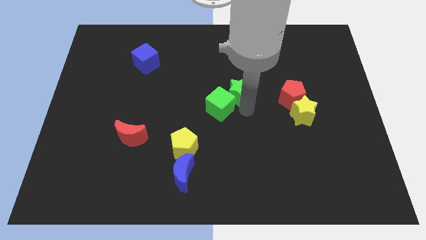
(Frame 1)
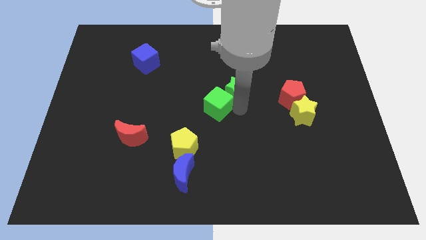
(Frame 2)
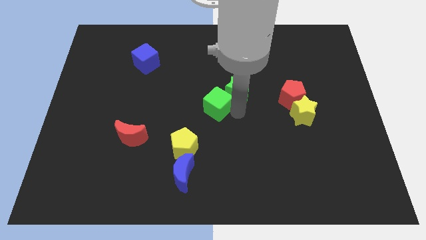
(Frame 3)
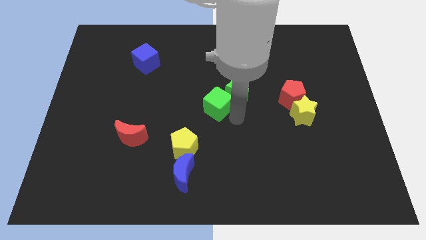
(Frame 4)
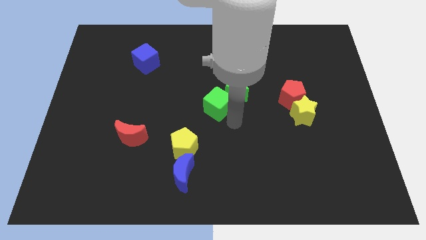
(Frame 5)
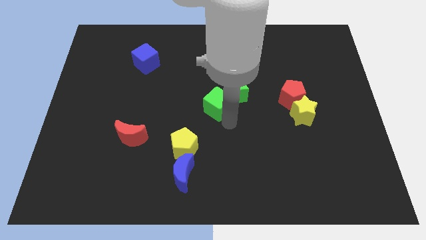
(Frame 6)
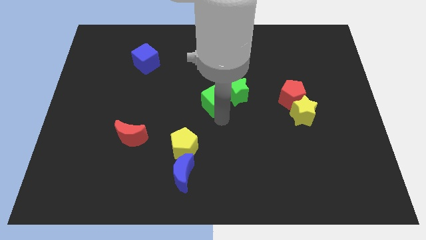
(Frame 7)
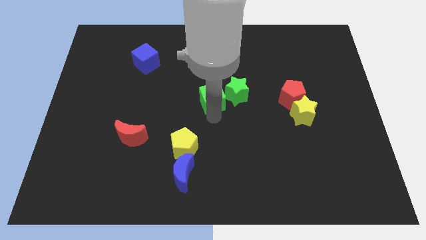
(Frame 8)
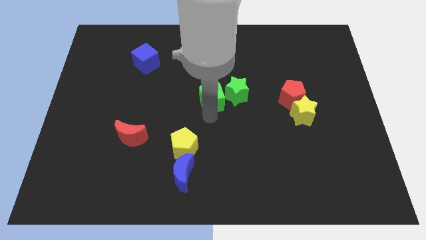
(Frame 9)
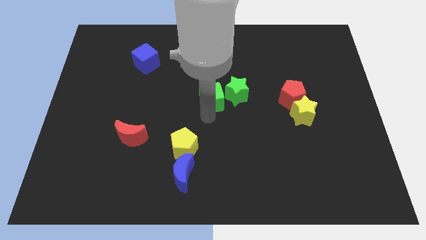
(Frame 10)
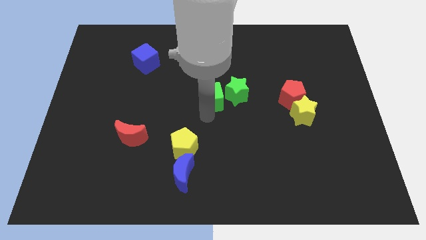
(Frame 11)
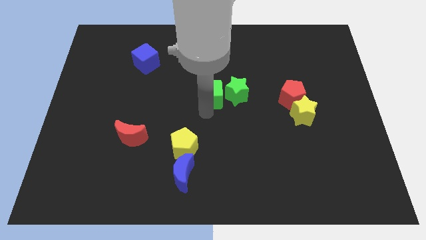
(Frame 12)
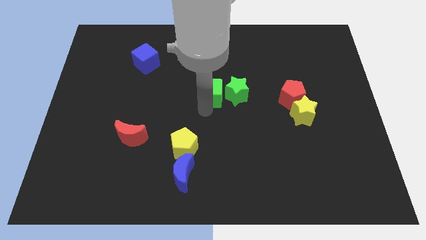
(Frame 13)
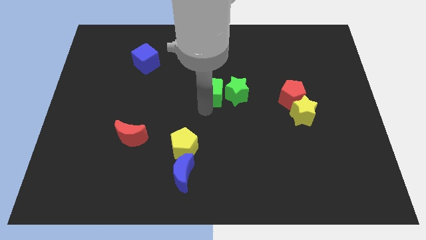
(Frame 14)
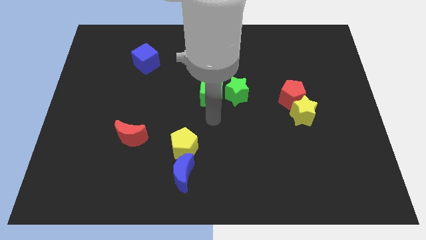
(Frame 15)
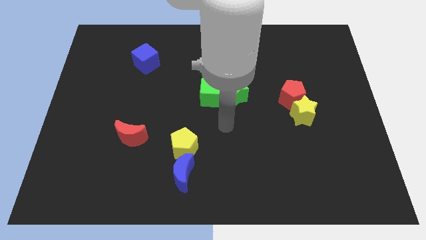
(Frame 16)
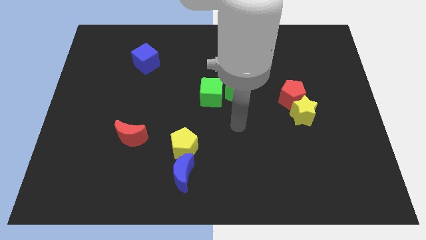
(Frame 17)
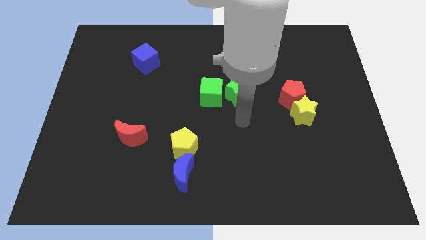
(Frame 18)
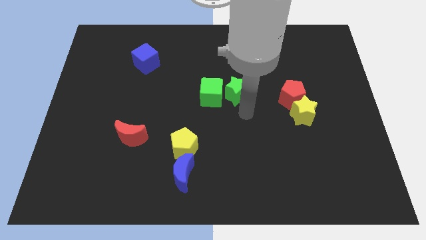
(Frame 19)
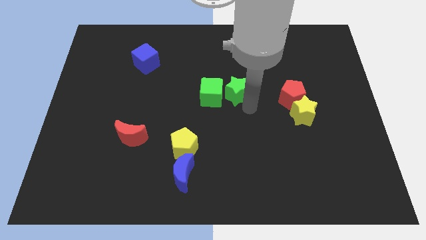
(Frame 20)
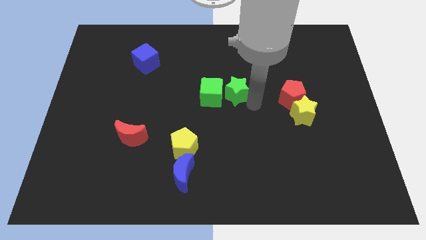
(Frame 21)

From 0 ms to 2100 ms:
slide green cube to the left of green star

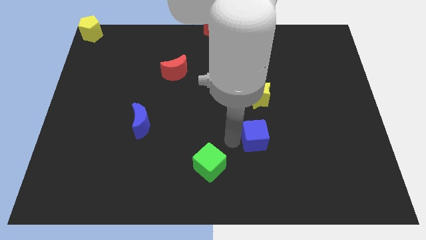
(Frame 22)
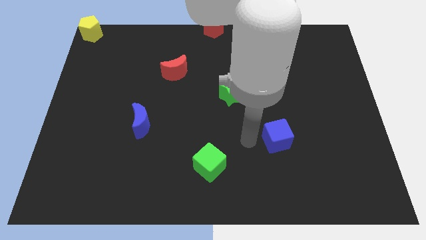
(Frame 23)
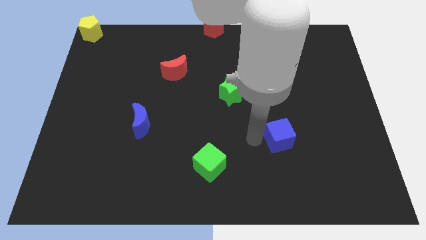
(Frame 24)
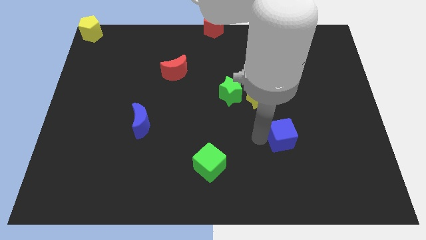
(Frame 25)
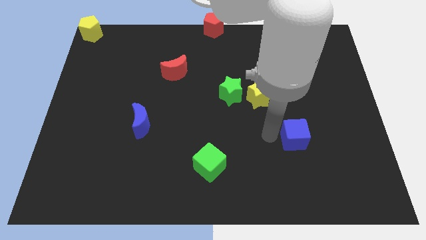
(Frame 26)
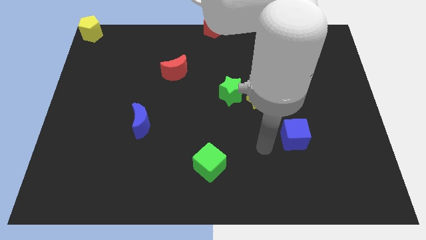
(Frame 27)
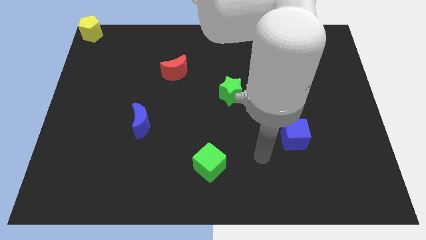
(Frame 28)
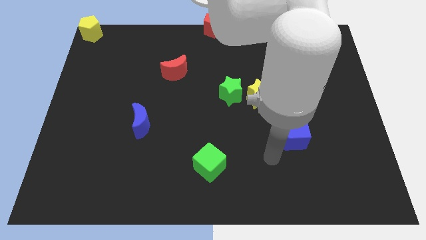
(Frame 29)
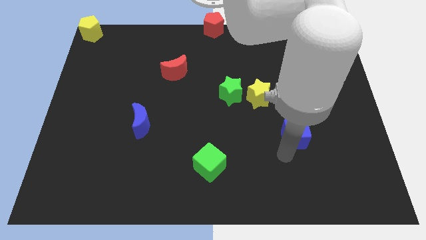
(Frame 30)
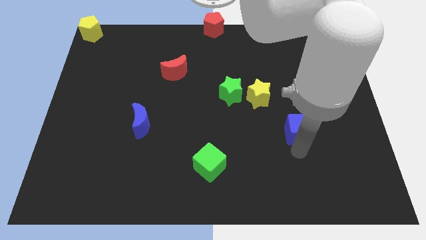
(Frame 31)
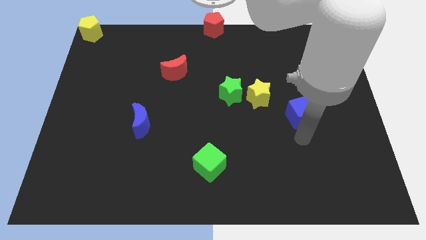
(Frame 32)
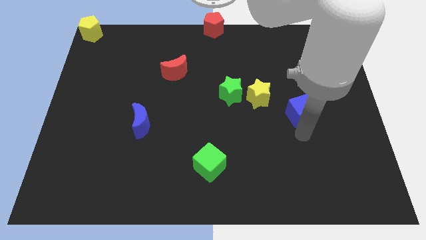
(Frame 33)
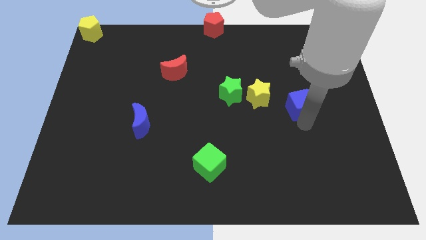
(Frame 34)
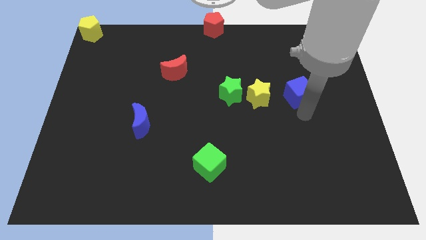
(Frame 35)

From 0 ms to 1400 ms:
place the blue cube parallel right to the yellow star

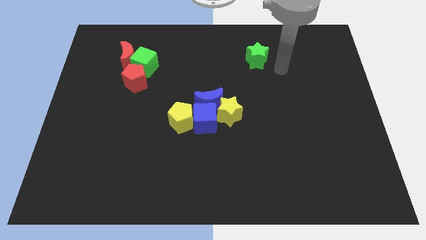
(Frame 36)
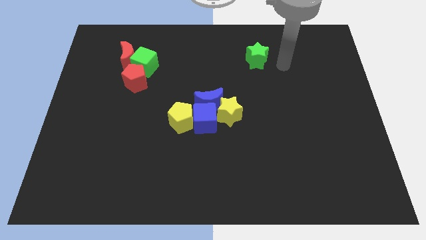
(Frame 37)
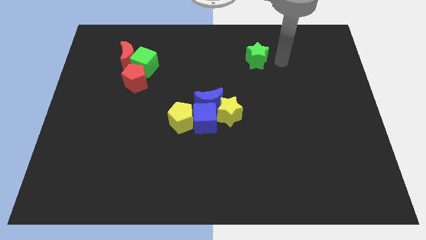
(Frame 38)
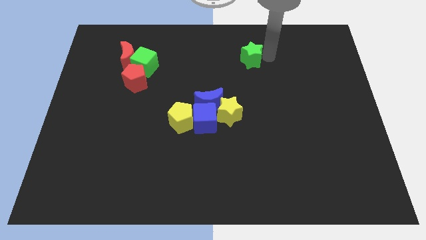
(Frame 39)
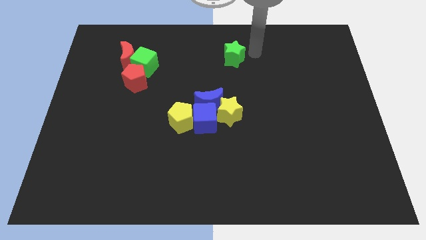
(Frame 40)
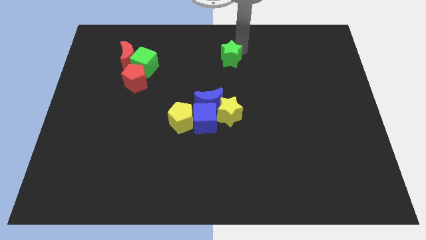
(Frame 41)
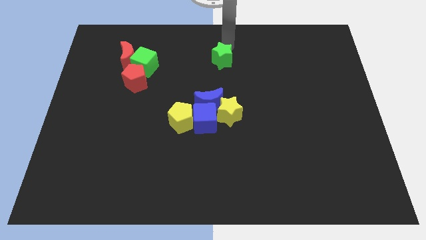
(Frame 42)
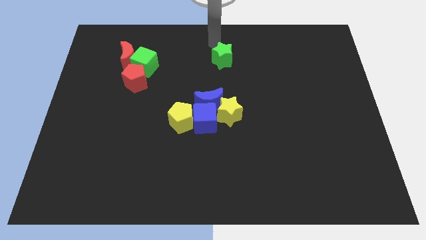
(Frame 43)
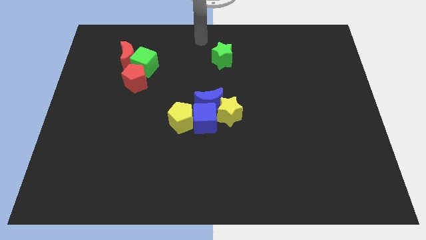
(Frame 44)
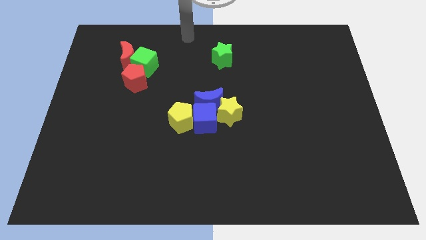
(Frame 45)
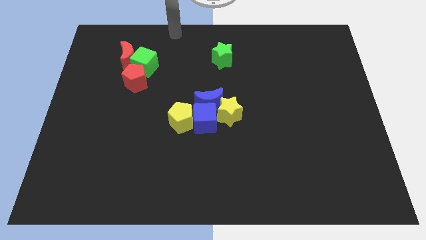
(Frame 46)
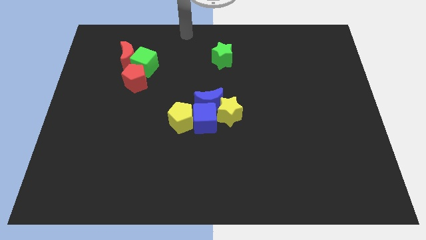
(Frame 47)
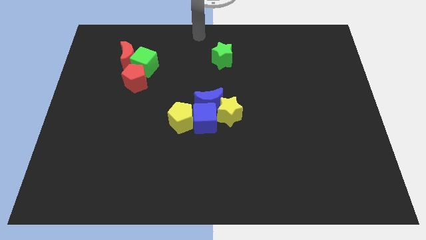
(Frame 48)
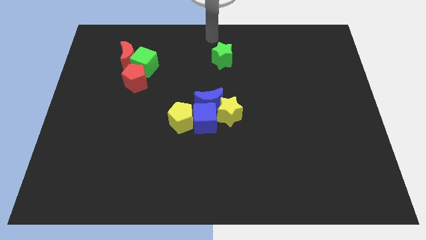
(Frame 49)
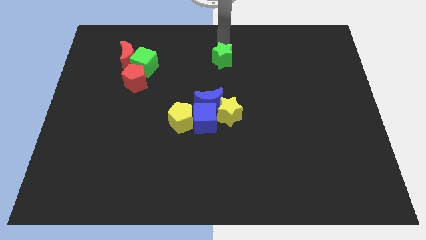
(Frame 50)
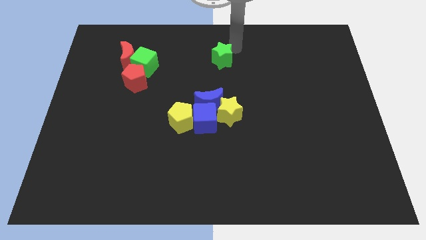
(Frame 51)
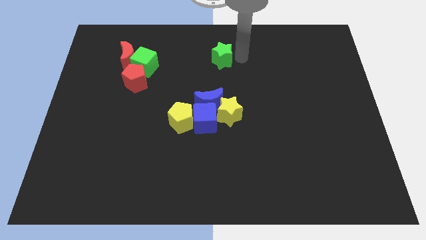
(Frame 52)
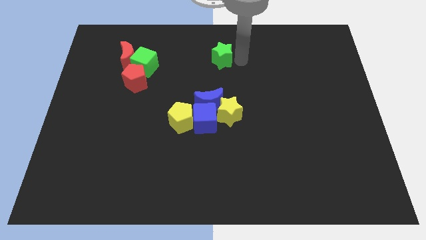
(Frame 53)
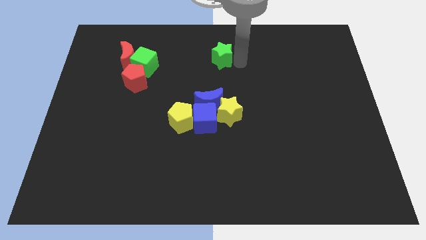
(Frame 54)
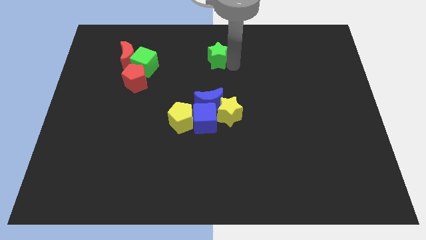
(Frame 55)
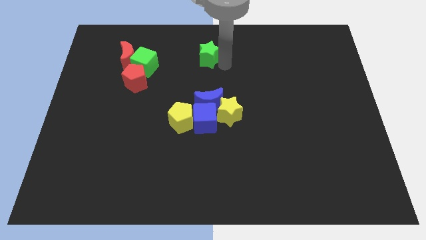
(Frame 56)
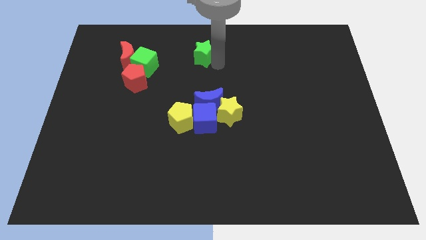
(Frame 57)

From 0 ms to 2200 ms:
place green star above blue crescent

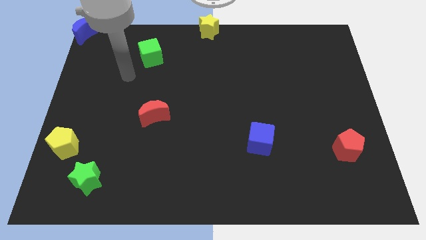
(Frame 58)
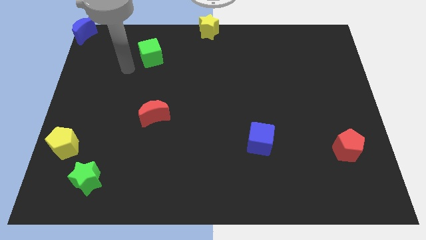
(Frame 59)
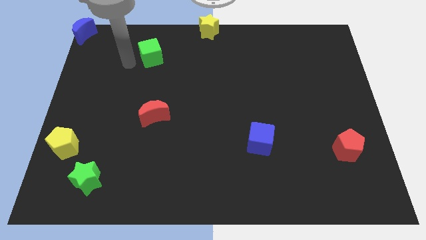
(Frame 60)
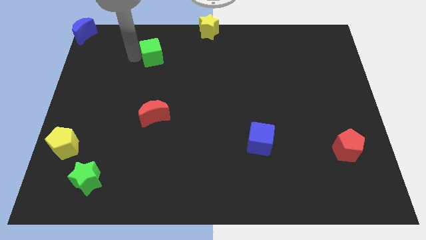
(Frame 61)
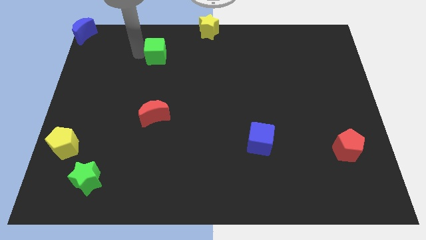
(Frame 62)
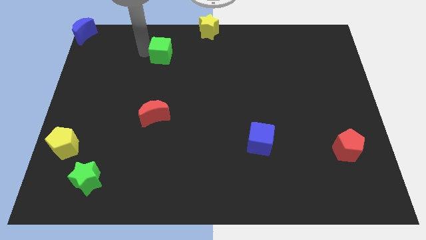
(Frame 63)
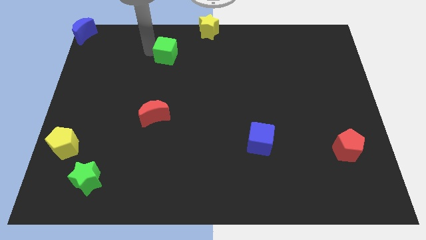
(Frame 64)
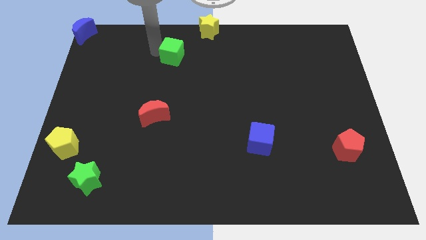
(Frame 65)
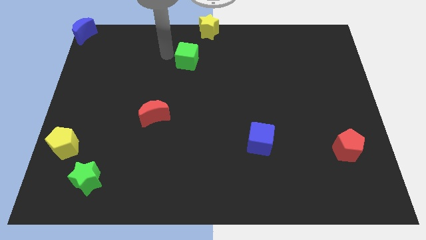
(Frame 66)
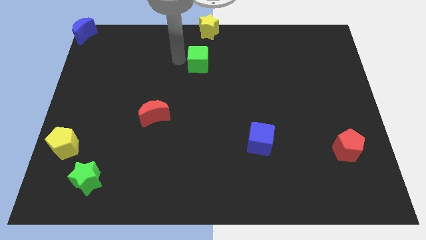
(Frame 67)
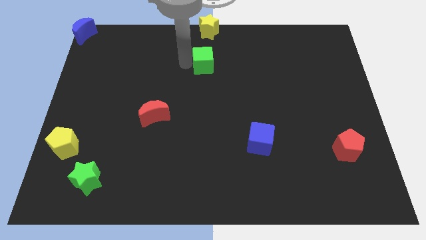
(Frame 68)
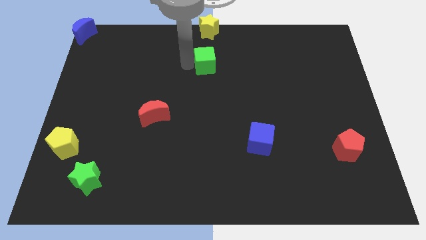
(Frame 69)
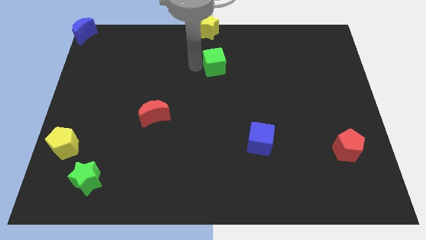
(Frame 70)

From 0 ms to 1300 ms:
push the green cube to the bottom of the yellow star

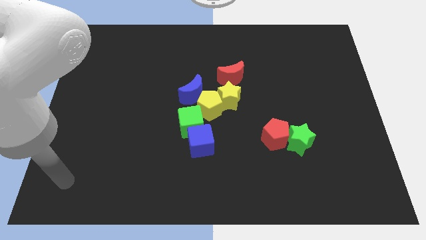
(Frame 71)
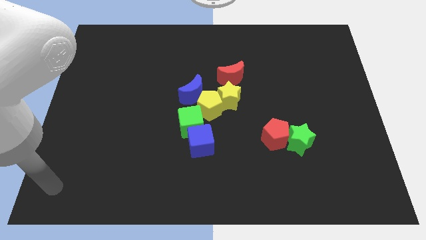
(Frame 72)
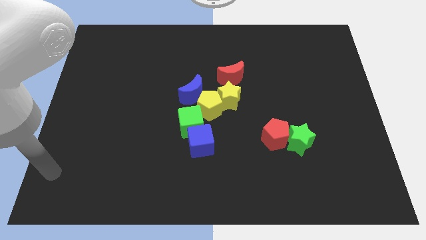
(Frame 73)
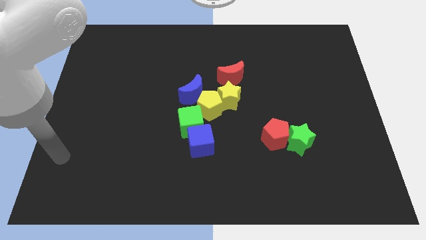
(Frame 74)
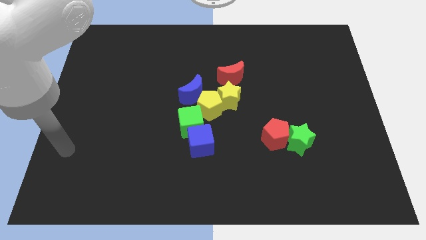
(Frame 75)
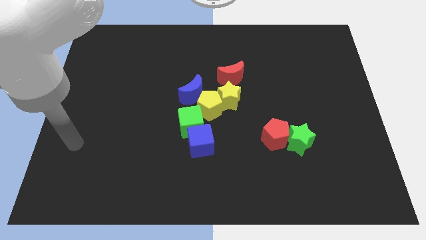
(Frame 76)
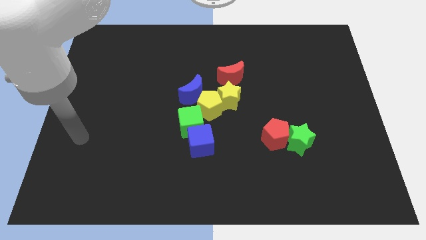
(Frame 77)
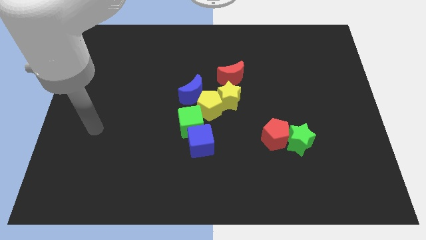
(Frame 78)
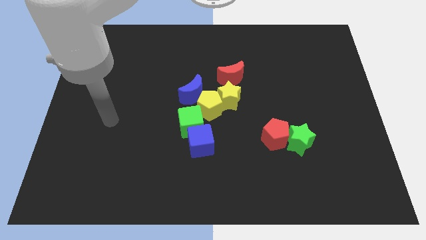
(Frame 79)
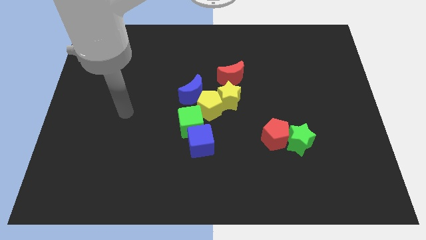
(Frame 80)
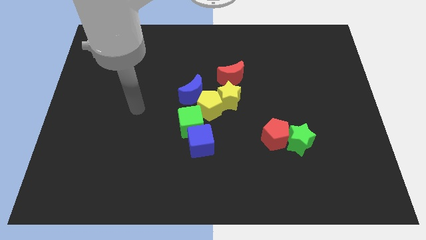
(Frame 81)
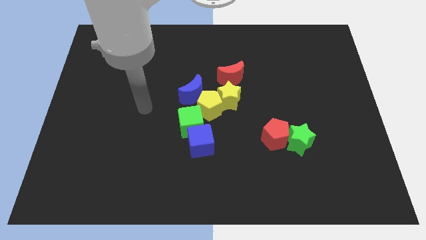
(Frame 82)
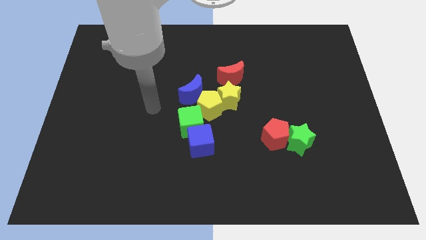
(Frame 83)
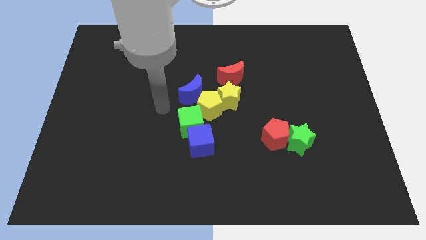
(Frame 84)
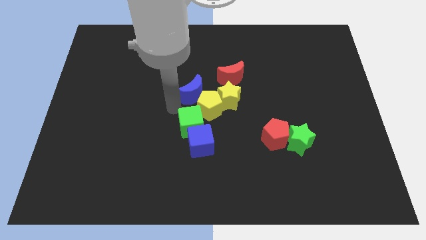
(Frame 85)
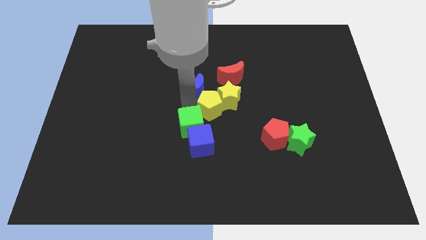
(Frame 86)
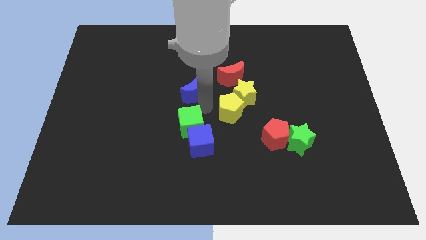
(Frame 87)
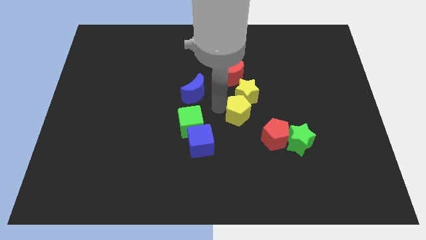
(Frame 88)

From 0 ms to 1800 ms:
separate the yellow pentagon from the green cube
